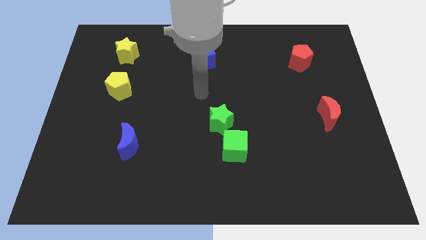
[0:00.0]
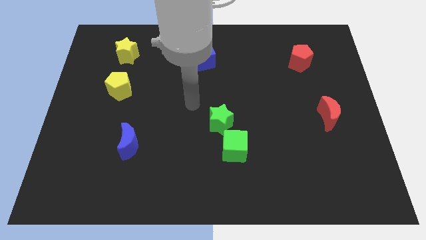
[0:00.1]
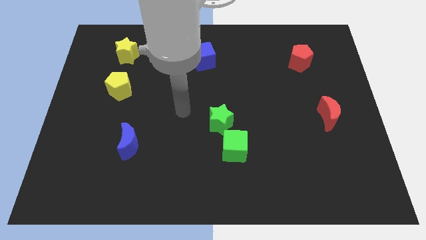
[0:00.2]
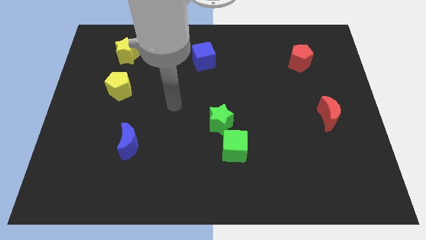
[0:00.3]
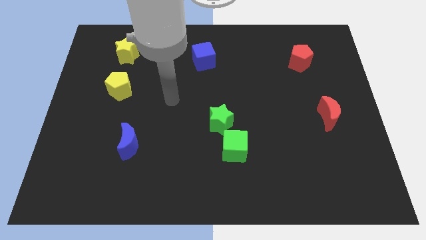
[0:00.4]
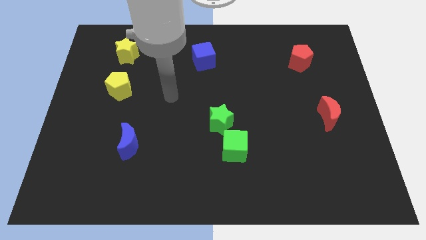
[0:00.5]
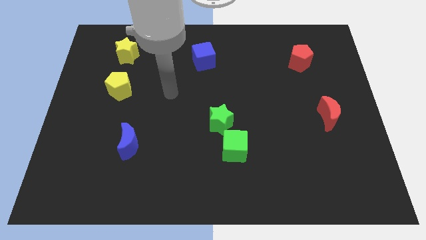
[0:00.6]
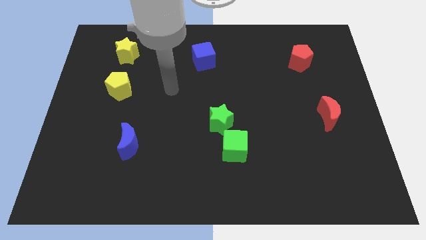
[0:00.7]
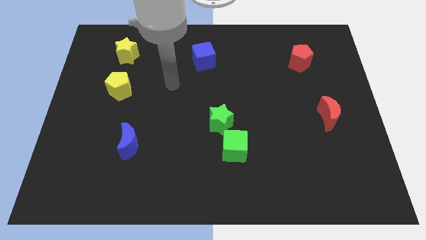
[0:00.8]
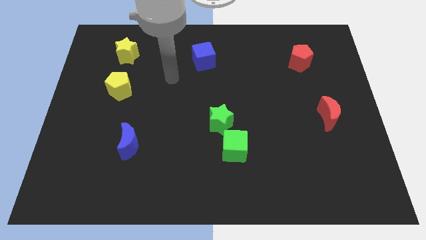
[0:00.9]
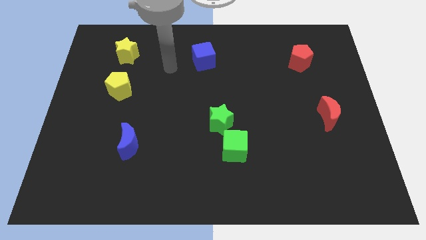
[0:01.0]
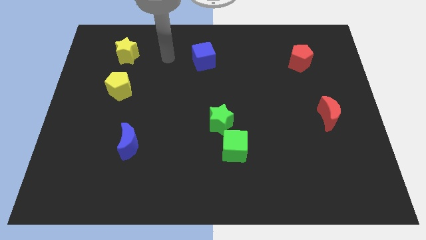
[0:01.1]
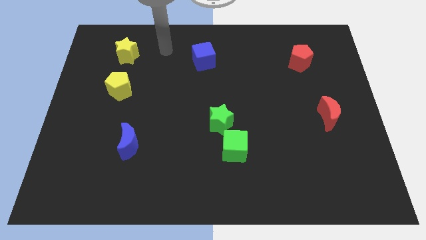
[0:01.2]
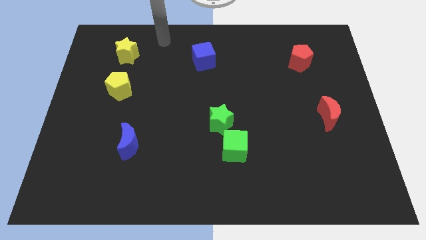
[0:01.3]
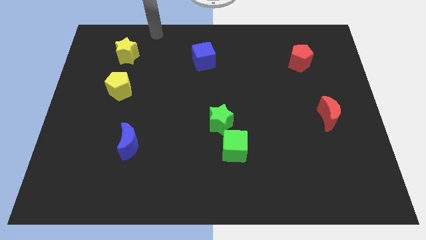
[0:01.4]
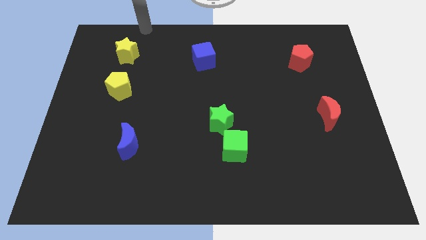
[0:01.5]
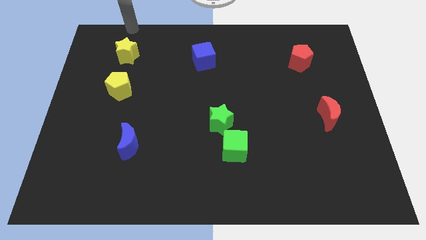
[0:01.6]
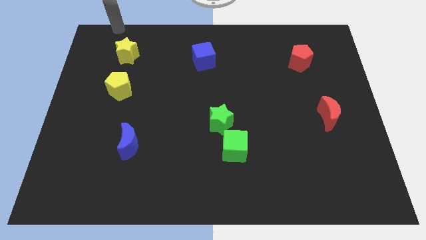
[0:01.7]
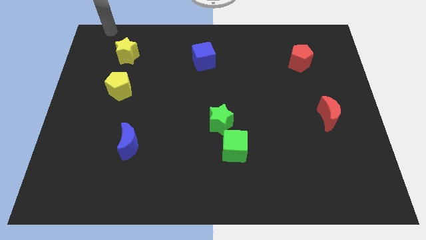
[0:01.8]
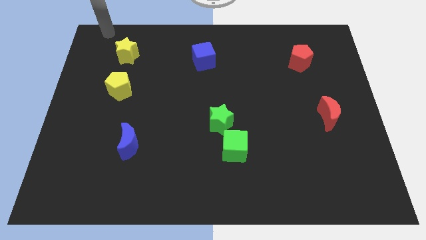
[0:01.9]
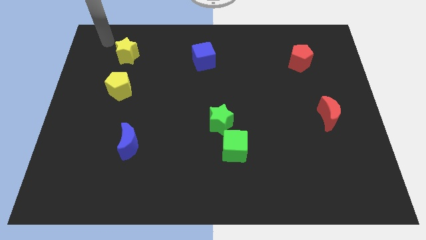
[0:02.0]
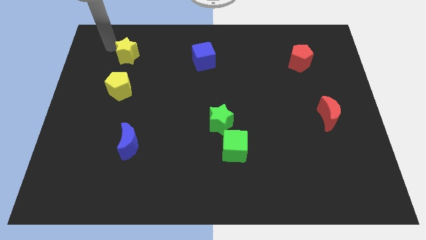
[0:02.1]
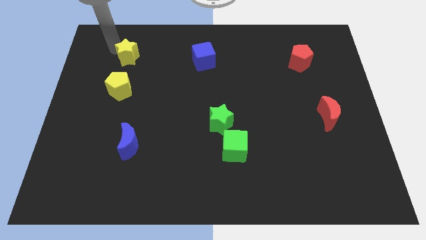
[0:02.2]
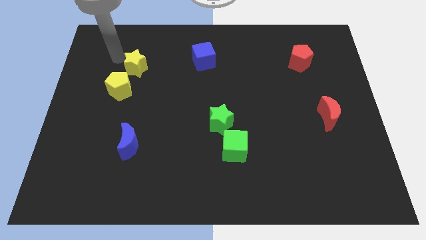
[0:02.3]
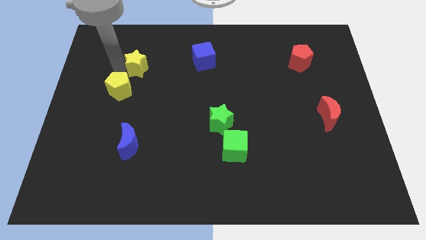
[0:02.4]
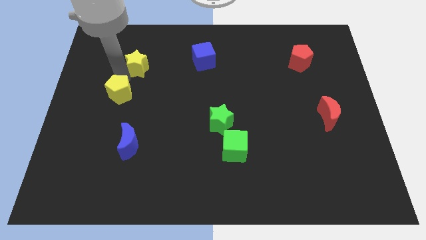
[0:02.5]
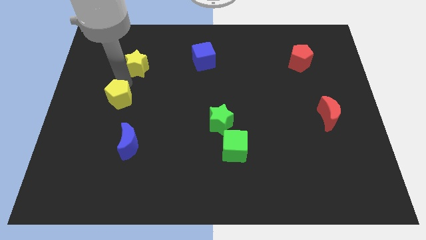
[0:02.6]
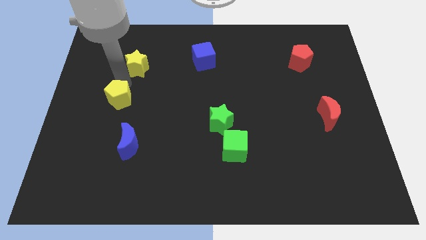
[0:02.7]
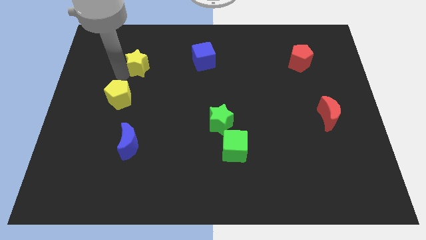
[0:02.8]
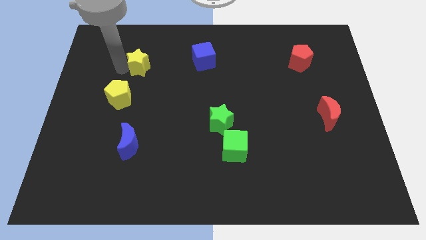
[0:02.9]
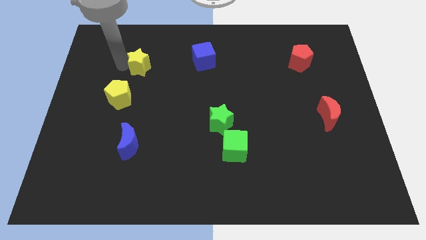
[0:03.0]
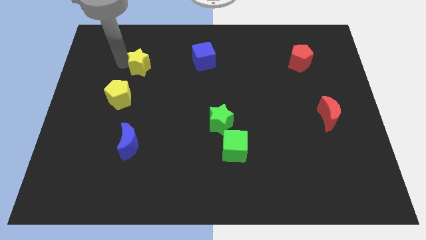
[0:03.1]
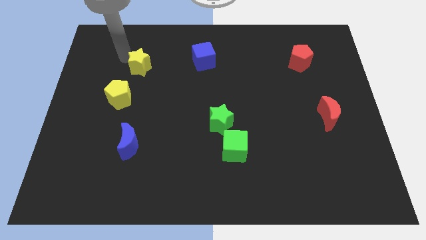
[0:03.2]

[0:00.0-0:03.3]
place yellow star to the top right of yellow pentagon

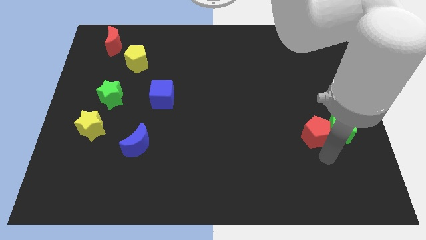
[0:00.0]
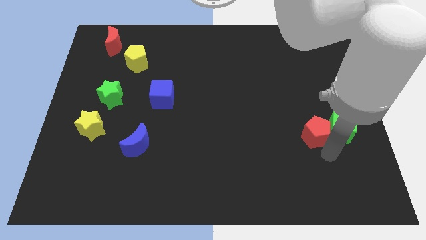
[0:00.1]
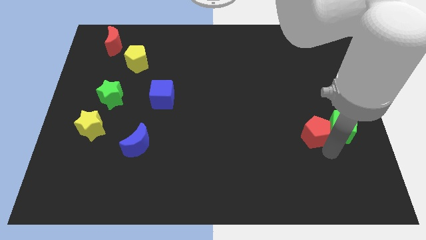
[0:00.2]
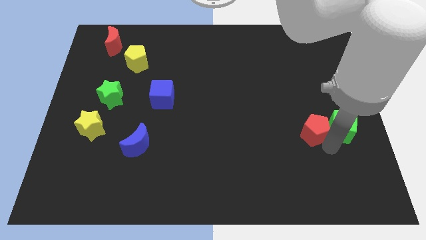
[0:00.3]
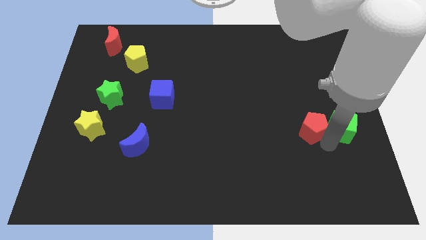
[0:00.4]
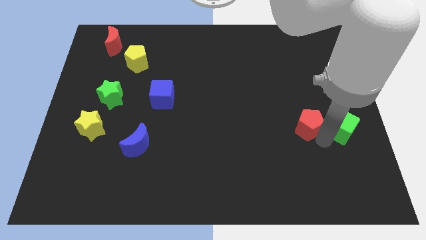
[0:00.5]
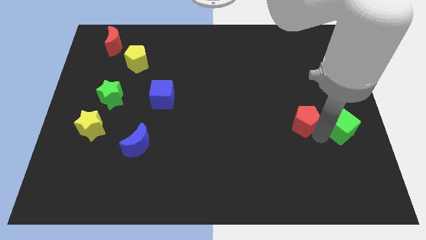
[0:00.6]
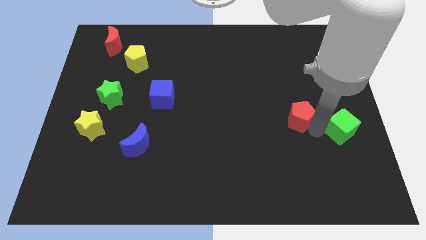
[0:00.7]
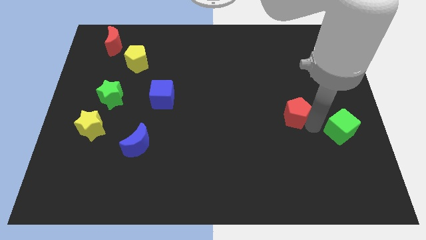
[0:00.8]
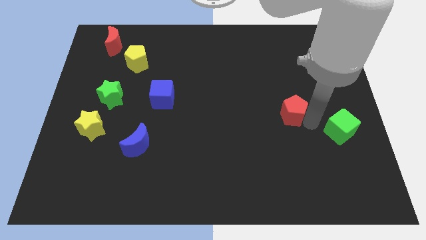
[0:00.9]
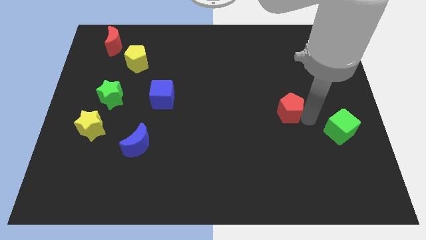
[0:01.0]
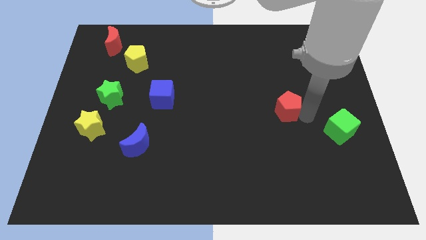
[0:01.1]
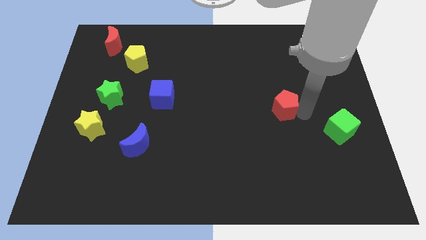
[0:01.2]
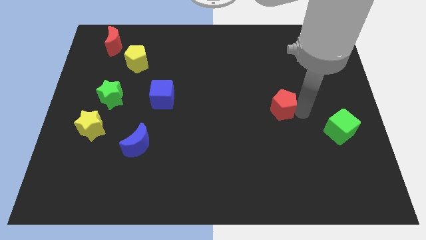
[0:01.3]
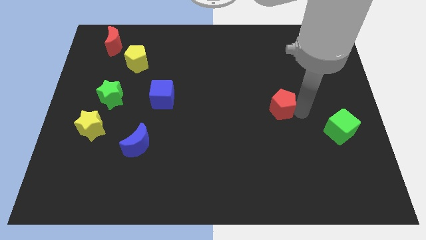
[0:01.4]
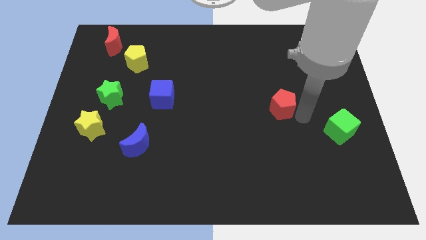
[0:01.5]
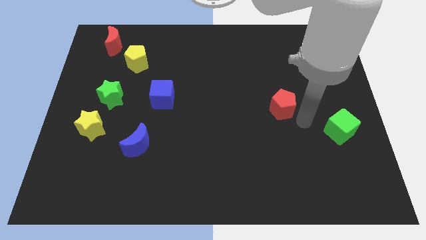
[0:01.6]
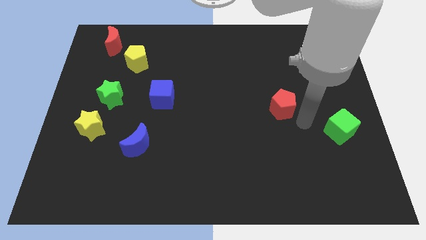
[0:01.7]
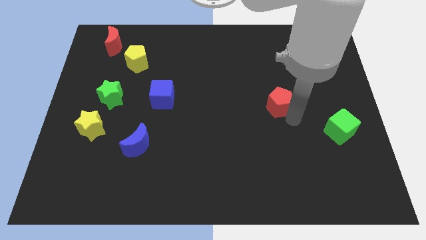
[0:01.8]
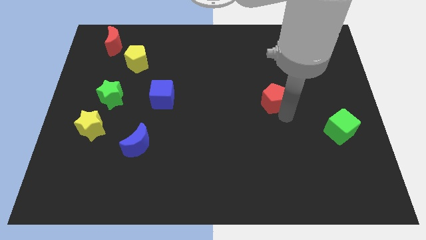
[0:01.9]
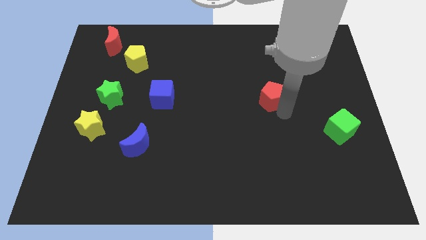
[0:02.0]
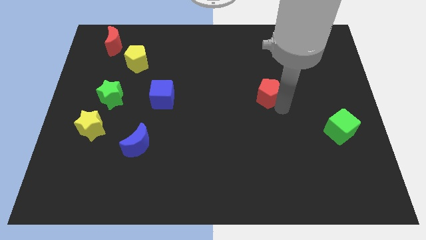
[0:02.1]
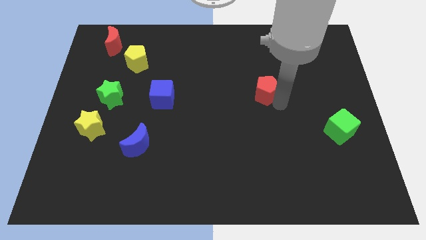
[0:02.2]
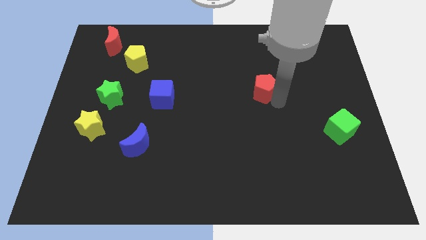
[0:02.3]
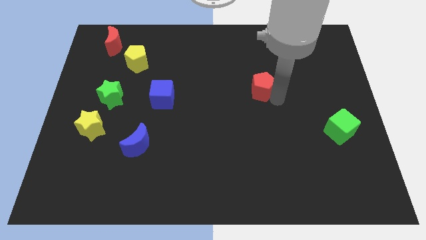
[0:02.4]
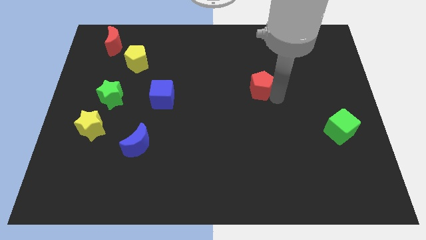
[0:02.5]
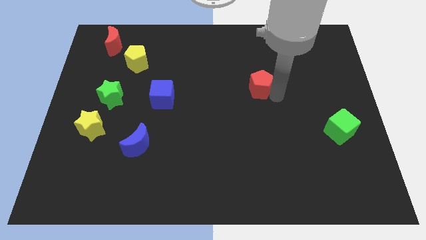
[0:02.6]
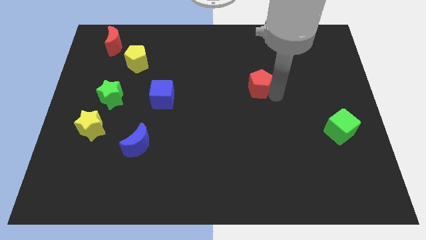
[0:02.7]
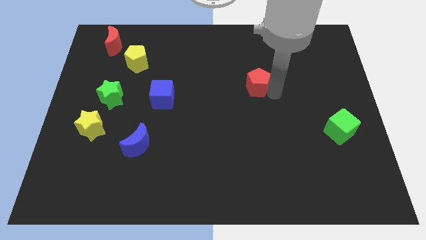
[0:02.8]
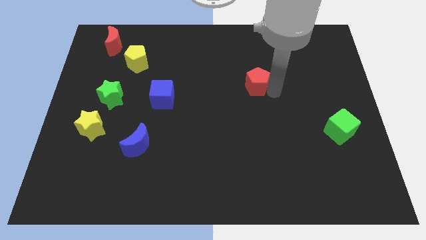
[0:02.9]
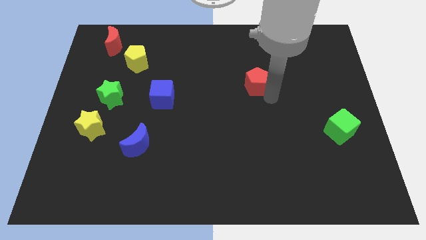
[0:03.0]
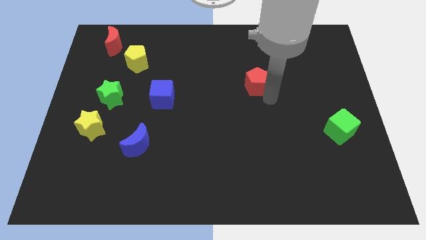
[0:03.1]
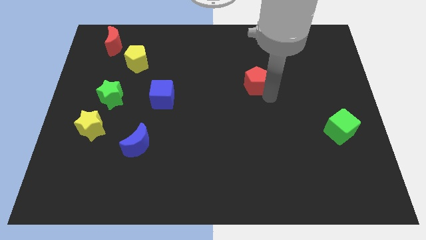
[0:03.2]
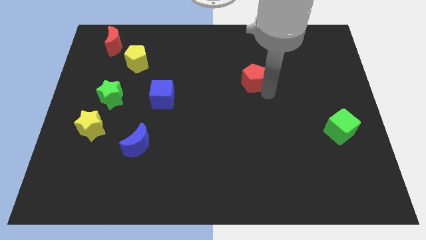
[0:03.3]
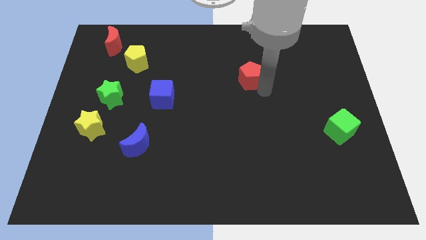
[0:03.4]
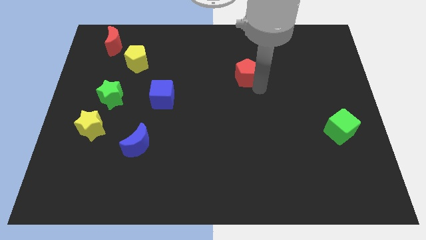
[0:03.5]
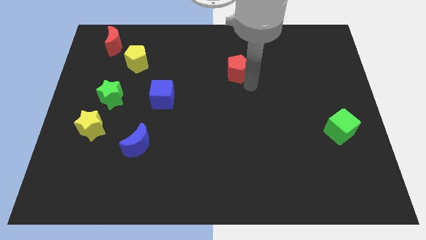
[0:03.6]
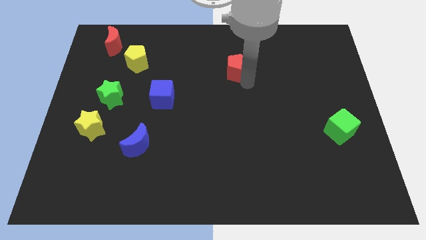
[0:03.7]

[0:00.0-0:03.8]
separate red pentagon from the green cube

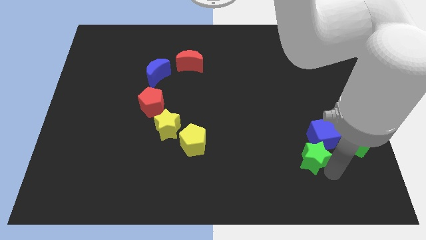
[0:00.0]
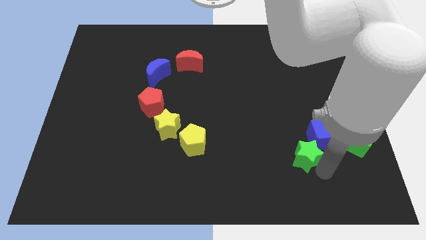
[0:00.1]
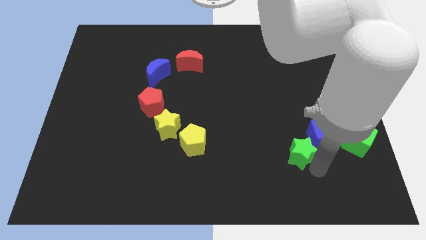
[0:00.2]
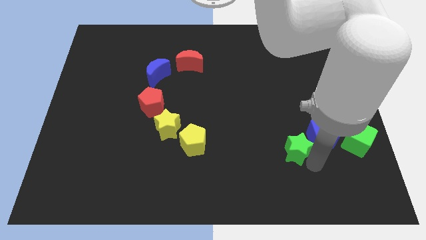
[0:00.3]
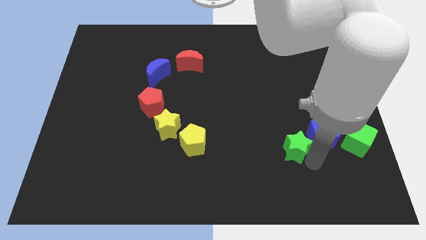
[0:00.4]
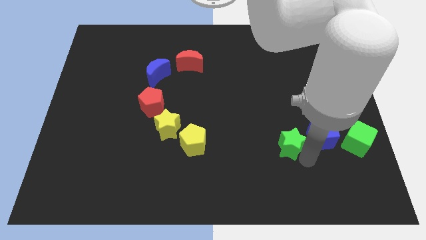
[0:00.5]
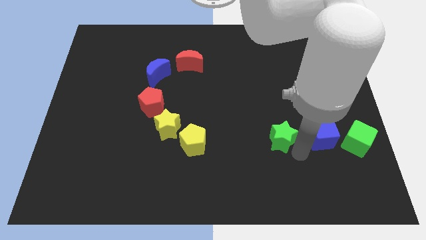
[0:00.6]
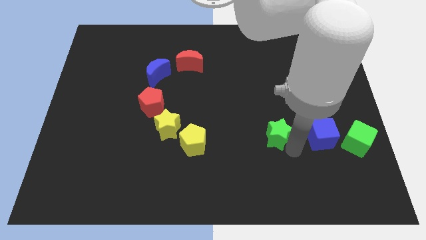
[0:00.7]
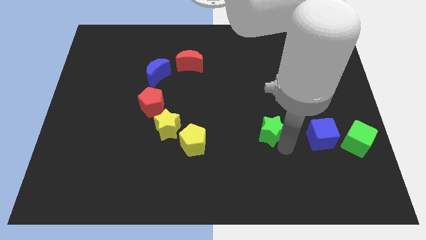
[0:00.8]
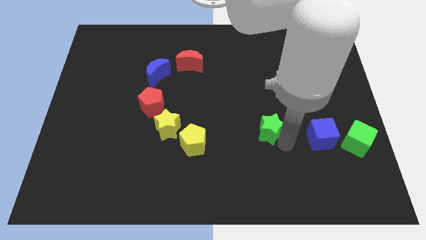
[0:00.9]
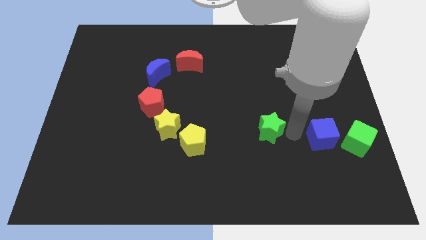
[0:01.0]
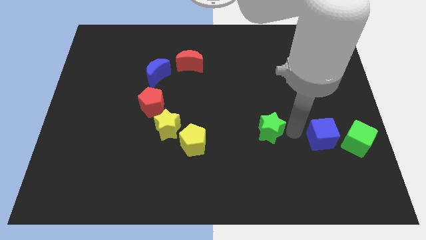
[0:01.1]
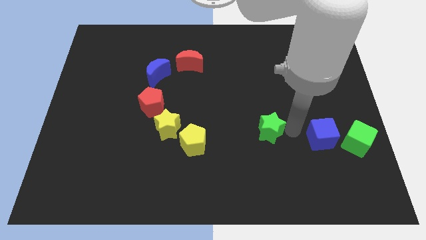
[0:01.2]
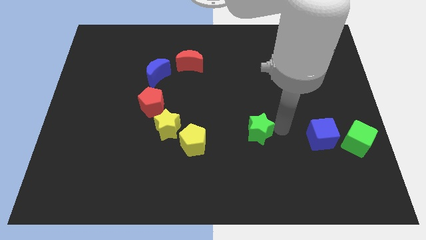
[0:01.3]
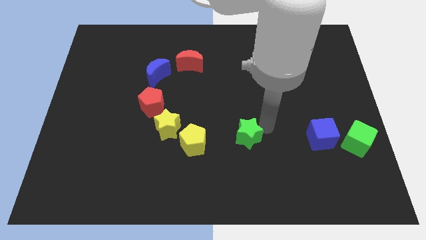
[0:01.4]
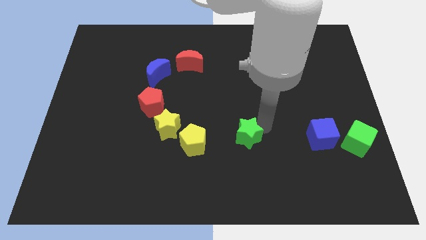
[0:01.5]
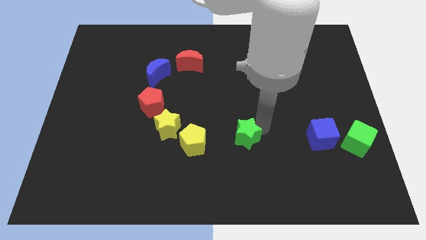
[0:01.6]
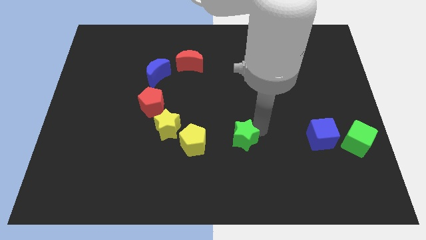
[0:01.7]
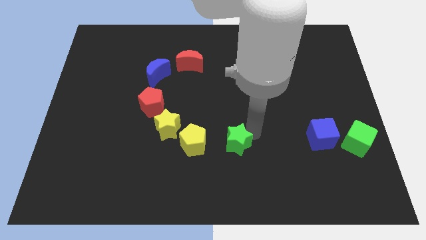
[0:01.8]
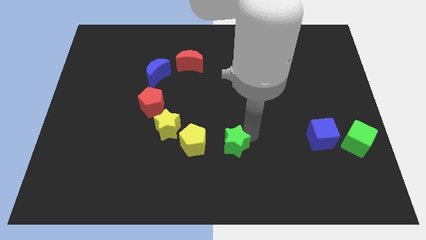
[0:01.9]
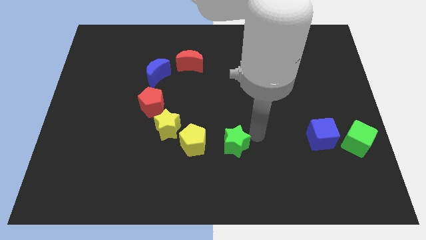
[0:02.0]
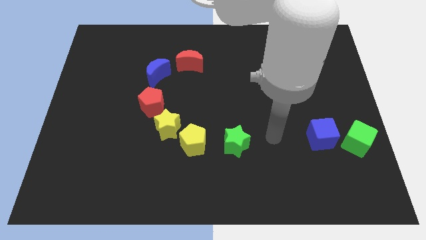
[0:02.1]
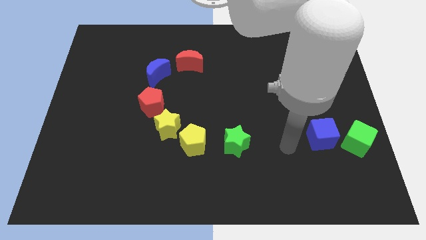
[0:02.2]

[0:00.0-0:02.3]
put the green star to the right of the yellow pentagon
